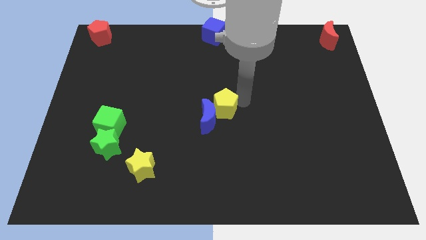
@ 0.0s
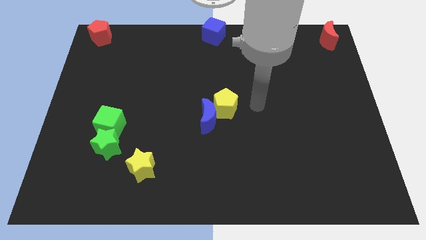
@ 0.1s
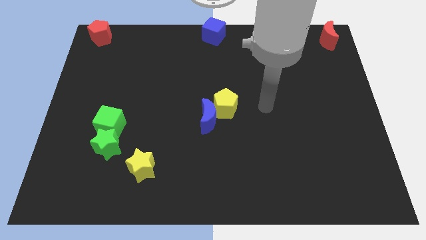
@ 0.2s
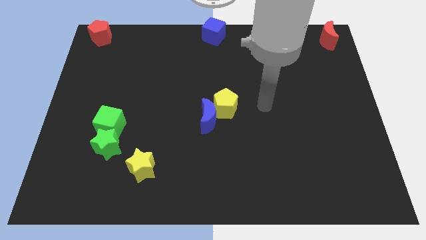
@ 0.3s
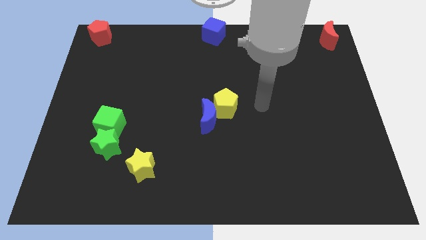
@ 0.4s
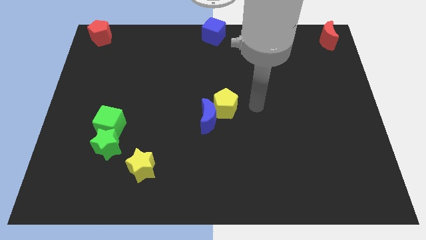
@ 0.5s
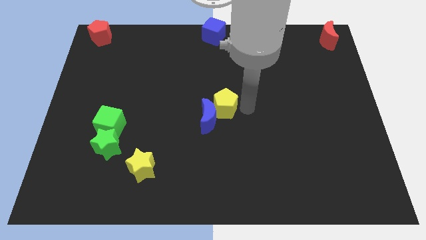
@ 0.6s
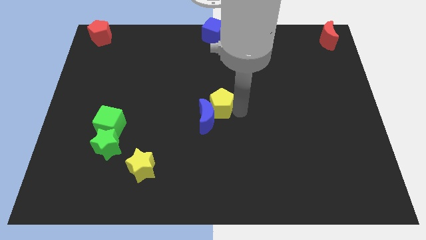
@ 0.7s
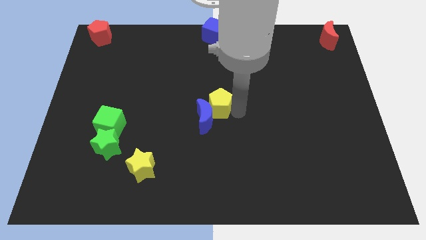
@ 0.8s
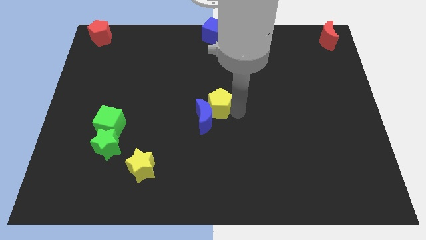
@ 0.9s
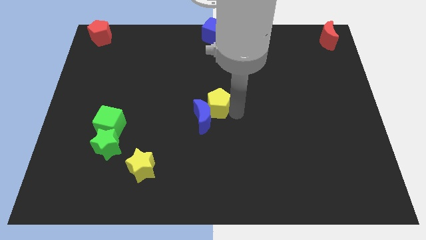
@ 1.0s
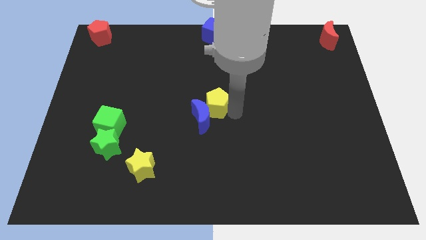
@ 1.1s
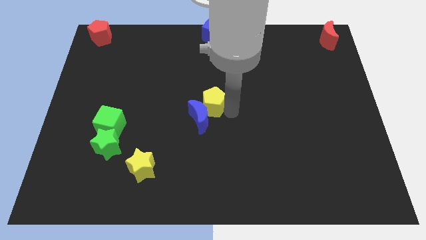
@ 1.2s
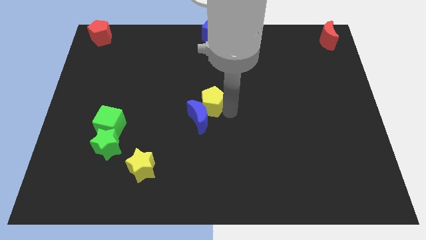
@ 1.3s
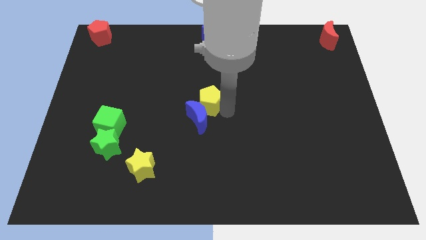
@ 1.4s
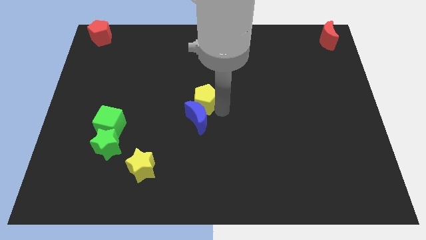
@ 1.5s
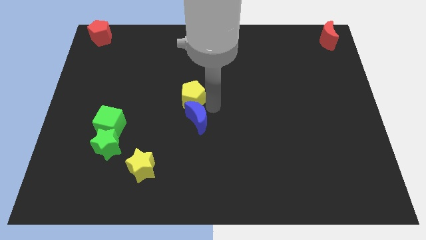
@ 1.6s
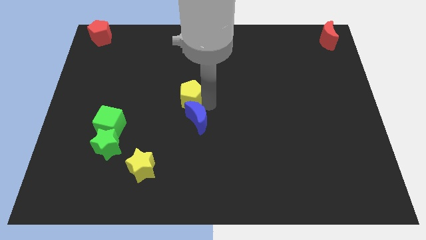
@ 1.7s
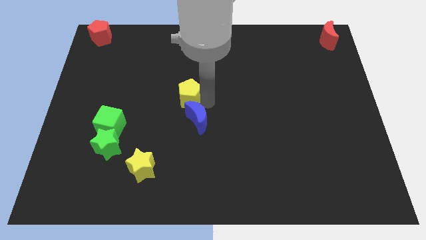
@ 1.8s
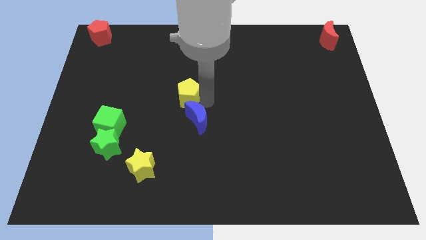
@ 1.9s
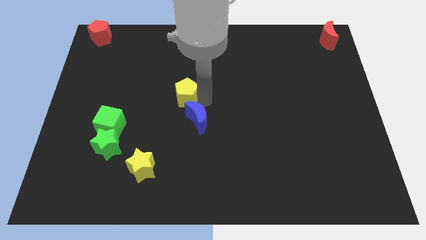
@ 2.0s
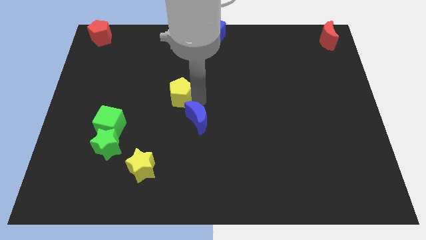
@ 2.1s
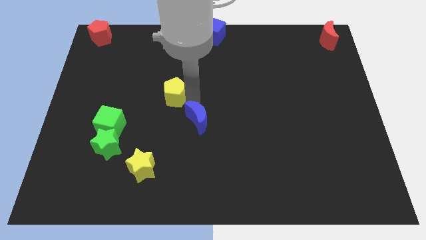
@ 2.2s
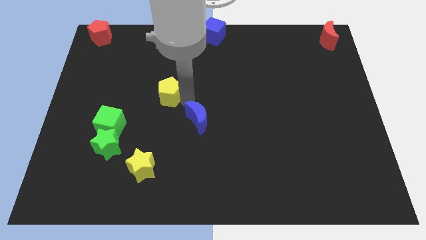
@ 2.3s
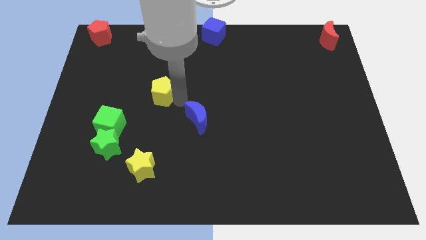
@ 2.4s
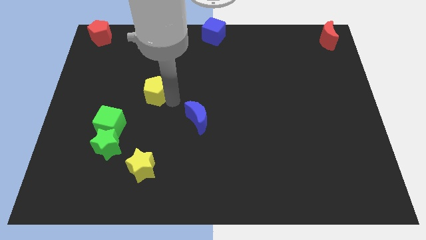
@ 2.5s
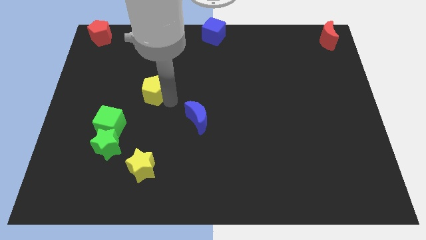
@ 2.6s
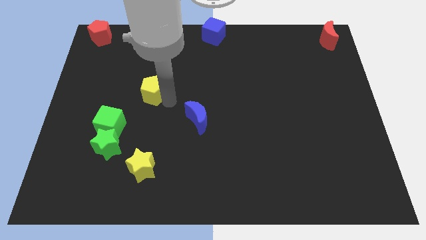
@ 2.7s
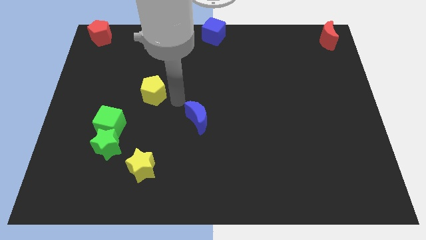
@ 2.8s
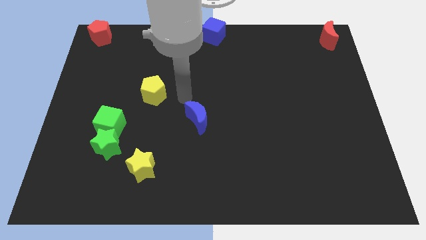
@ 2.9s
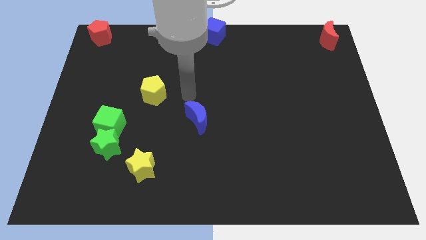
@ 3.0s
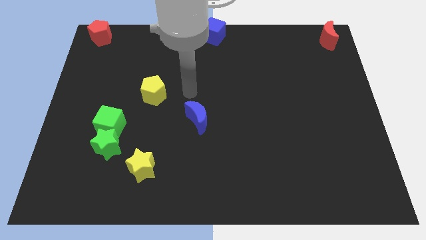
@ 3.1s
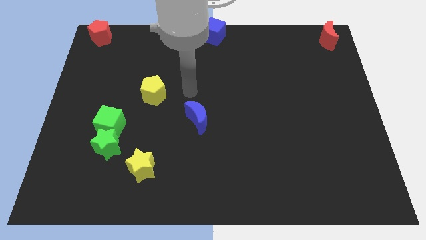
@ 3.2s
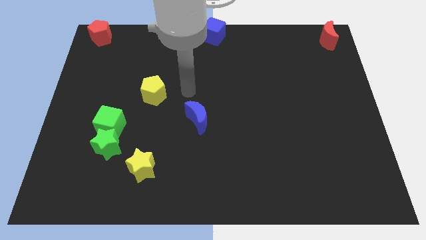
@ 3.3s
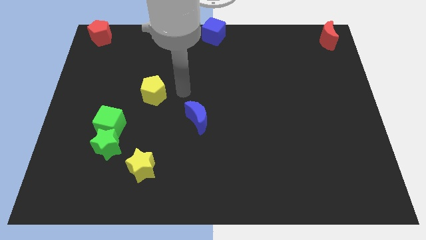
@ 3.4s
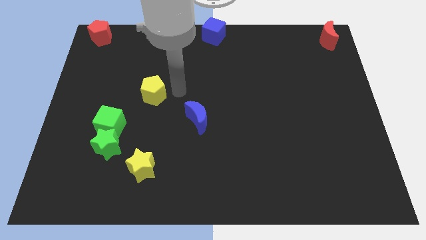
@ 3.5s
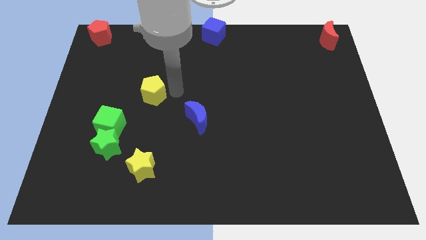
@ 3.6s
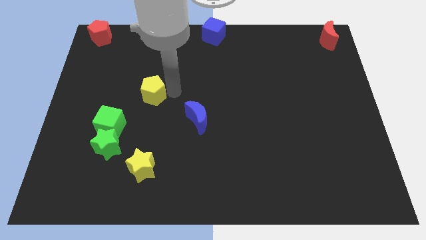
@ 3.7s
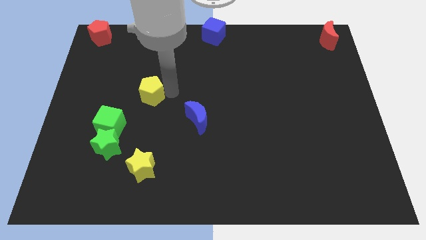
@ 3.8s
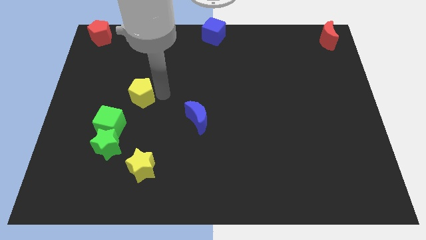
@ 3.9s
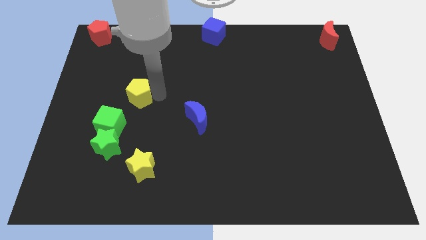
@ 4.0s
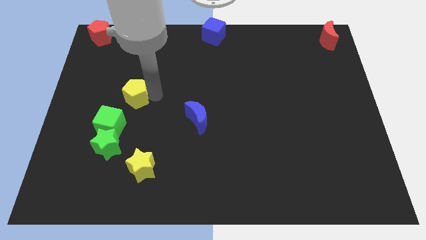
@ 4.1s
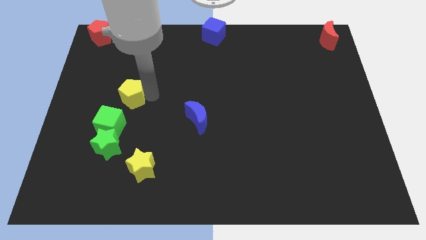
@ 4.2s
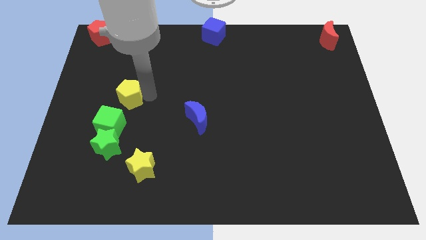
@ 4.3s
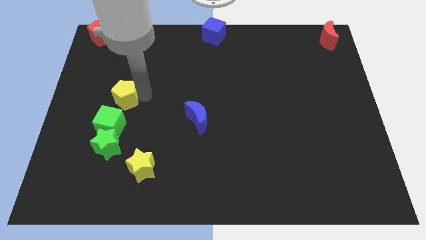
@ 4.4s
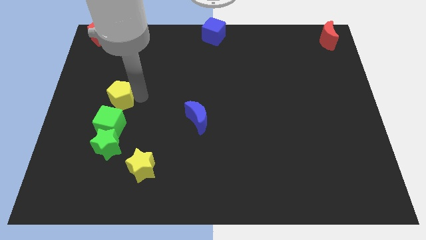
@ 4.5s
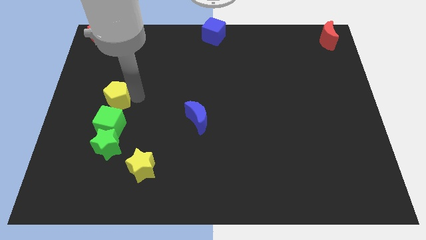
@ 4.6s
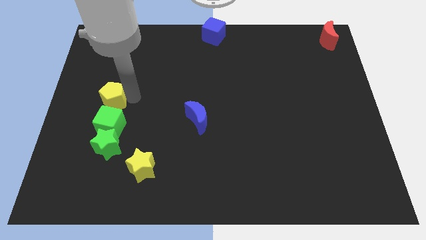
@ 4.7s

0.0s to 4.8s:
separate the yellow pentagon from the blue moon

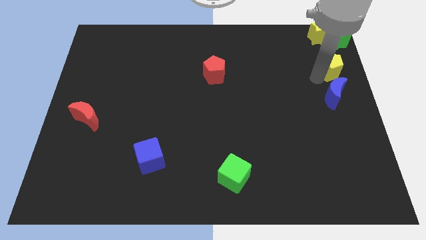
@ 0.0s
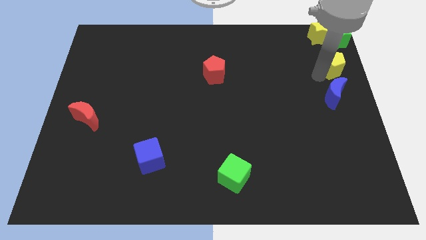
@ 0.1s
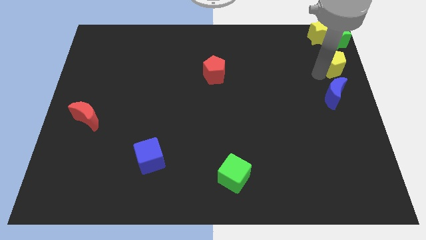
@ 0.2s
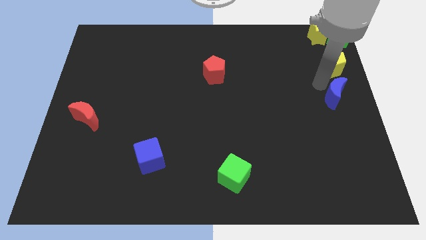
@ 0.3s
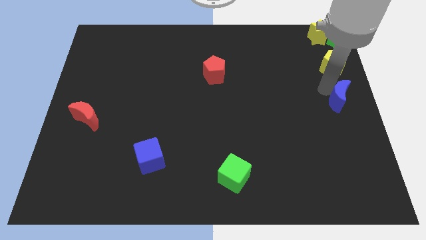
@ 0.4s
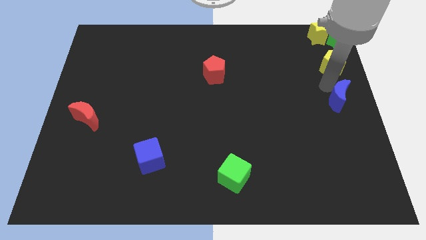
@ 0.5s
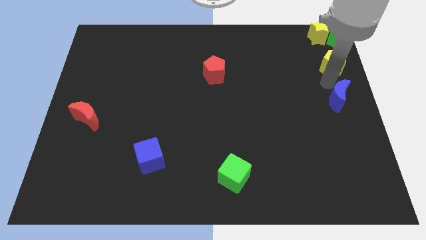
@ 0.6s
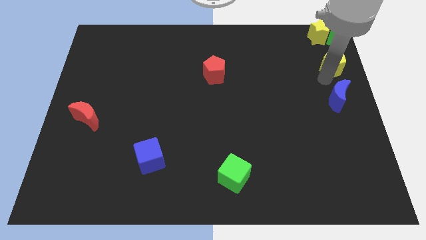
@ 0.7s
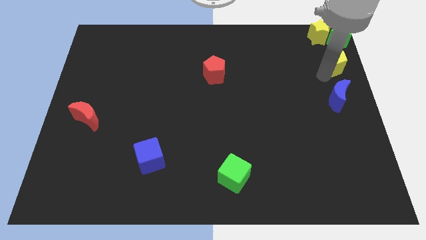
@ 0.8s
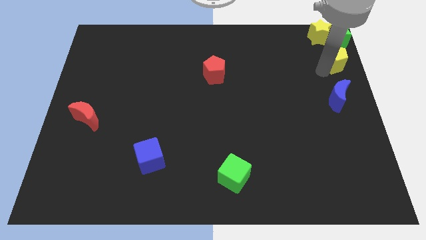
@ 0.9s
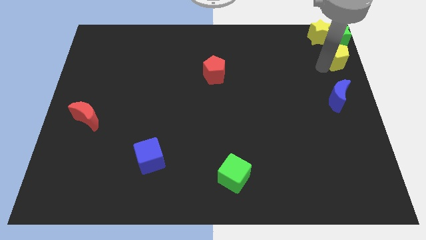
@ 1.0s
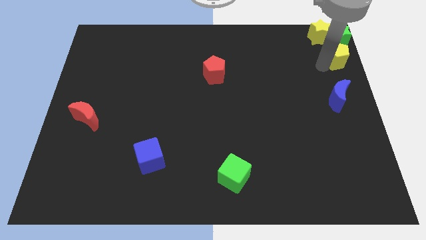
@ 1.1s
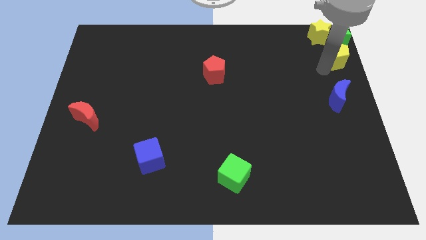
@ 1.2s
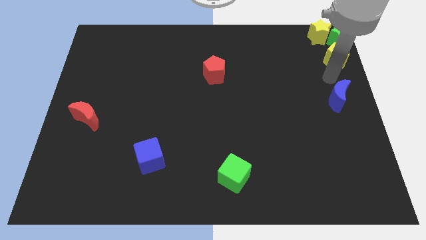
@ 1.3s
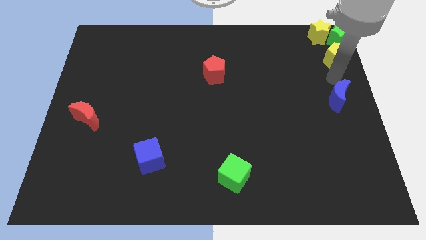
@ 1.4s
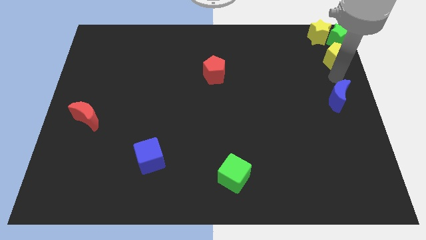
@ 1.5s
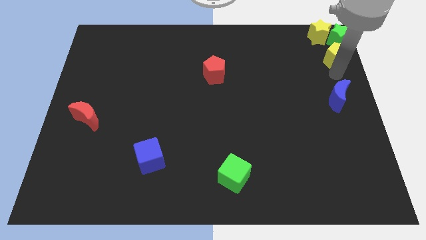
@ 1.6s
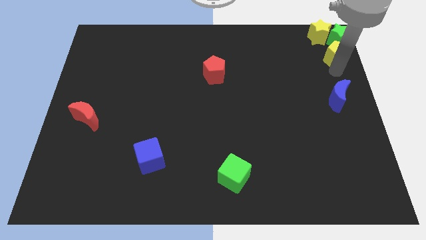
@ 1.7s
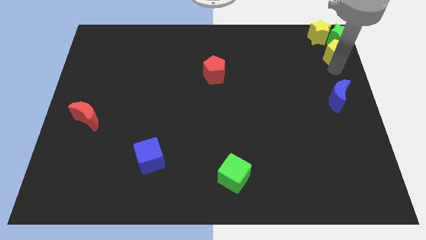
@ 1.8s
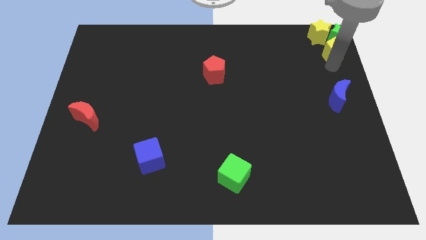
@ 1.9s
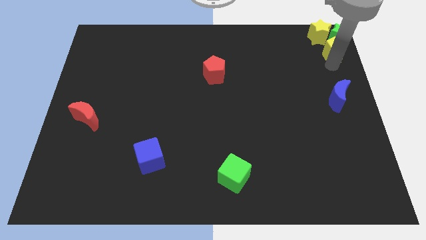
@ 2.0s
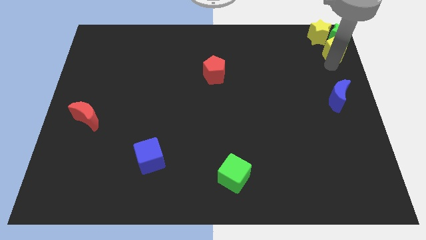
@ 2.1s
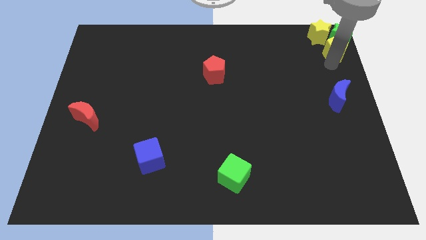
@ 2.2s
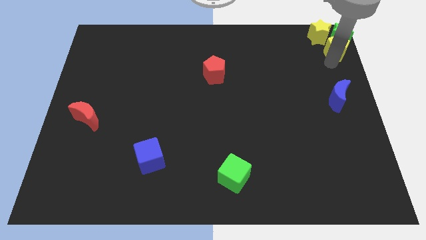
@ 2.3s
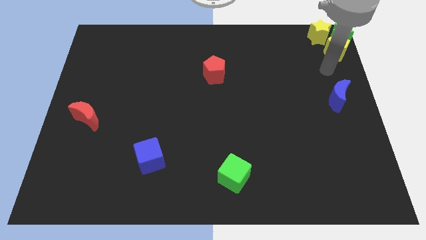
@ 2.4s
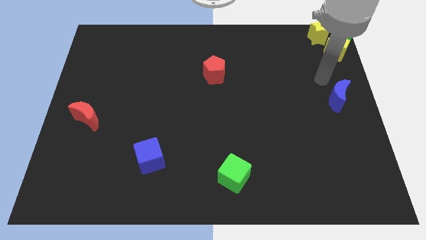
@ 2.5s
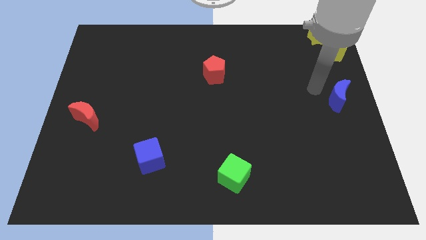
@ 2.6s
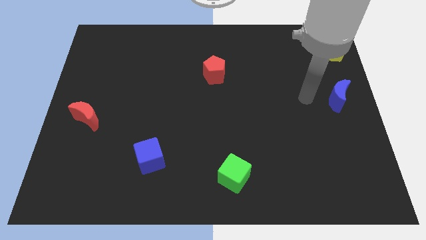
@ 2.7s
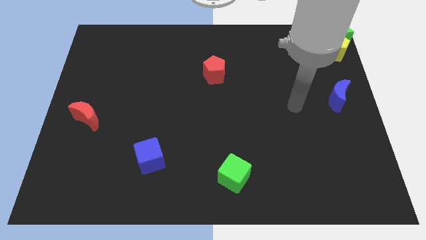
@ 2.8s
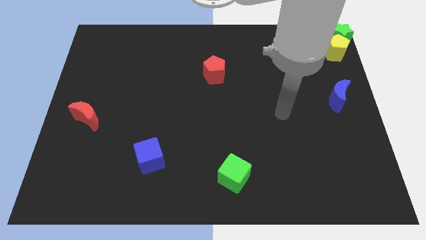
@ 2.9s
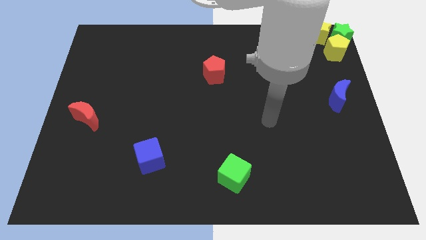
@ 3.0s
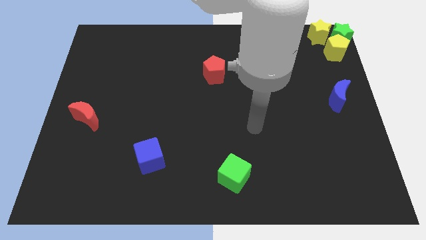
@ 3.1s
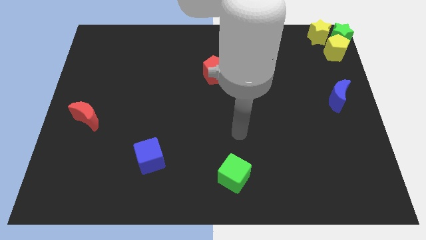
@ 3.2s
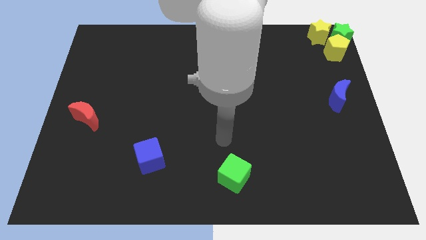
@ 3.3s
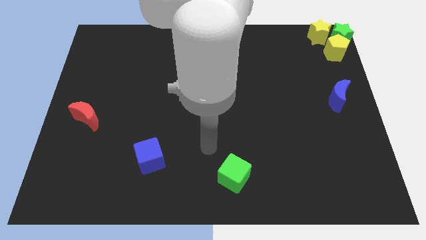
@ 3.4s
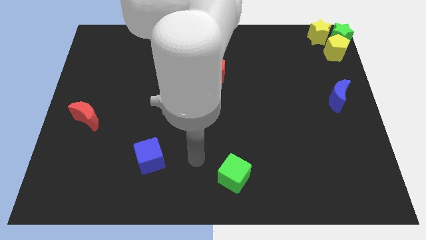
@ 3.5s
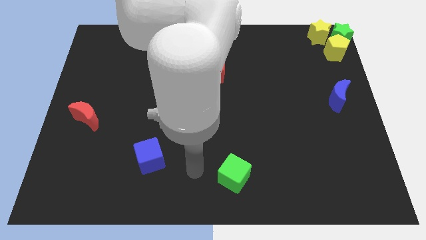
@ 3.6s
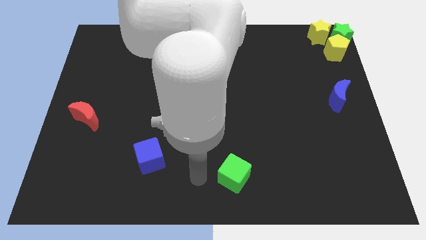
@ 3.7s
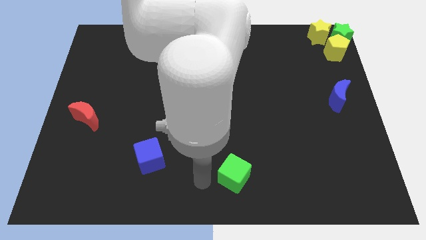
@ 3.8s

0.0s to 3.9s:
move the yellow pentagon to the top right corner of he board

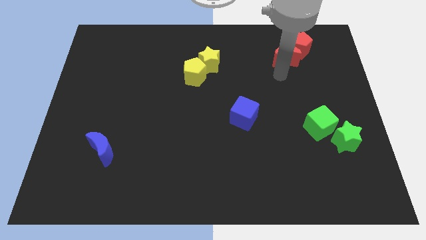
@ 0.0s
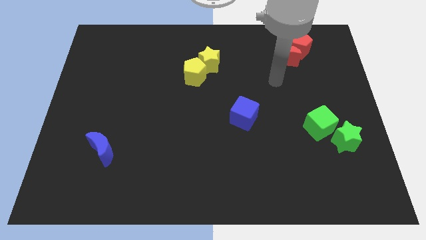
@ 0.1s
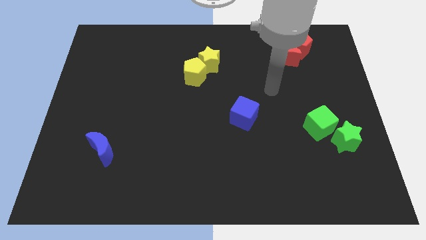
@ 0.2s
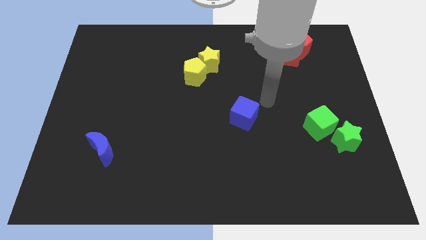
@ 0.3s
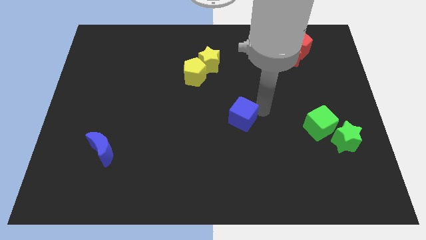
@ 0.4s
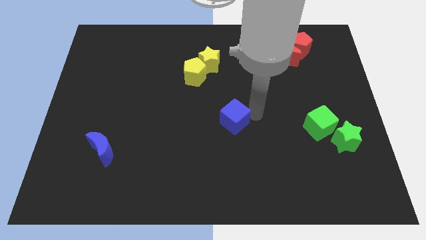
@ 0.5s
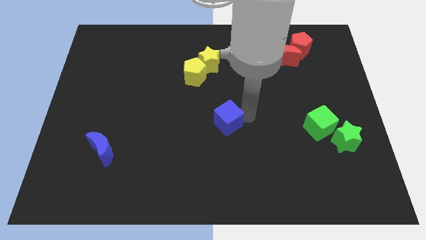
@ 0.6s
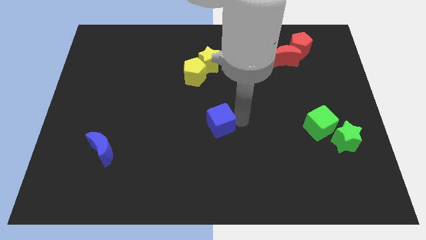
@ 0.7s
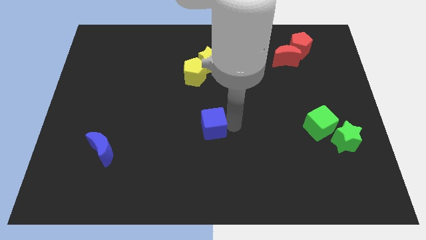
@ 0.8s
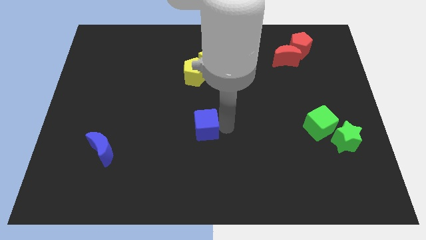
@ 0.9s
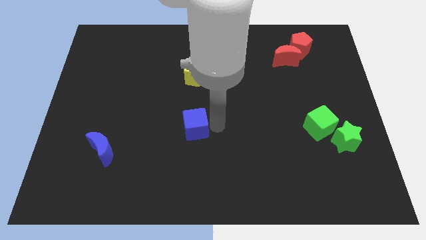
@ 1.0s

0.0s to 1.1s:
slide the blue cube to the bottom of the yellow pentagon
